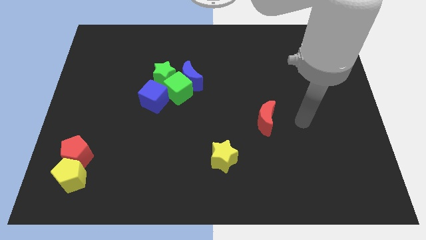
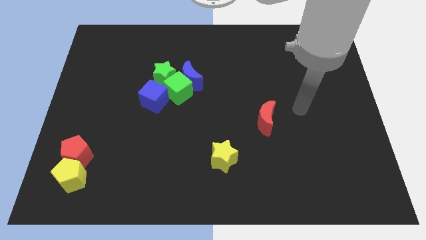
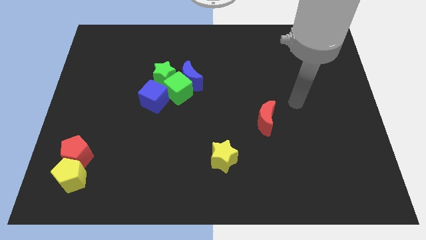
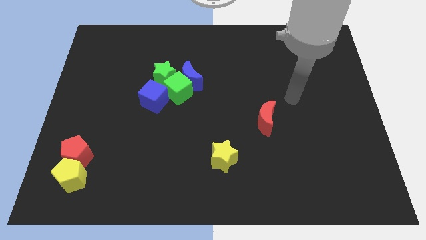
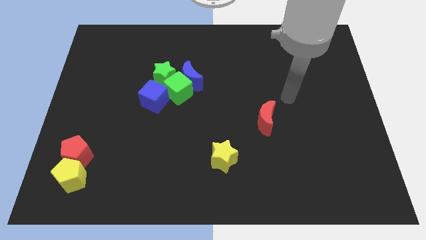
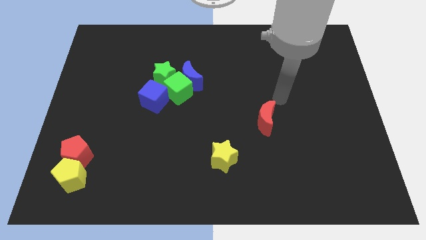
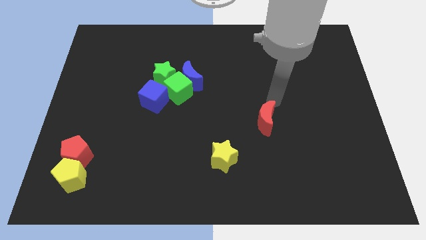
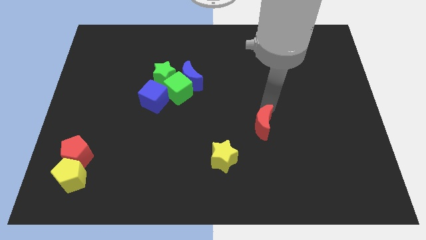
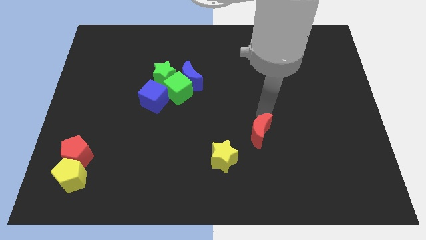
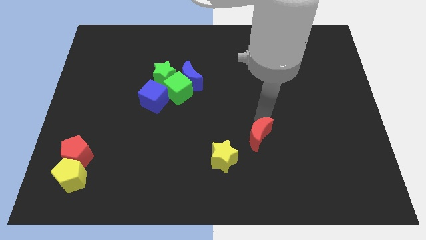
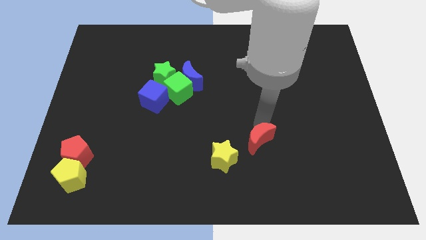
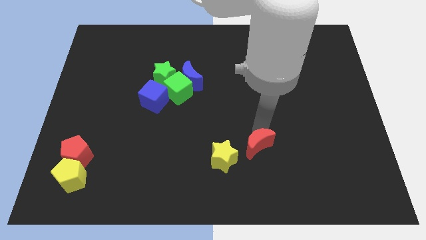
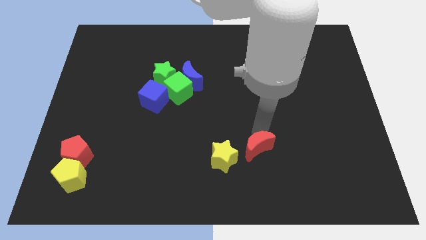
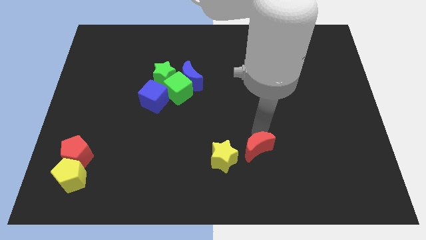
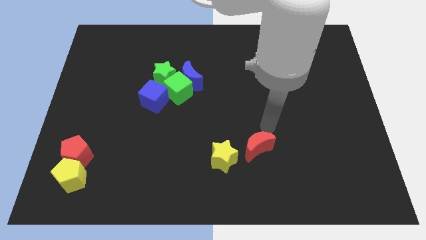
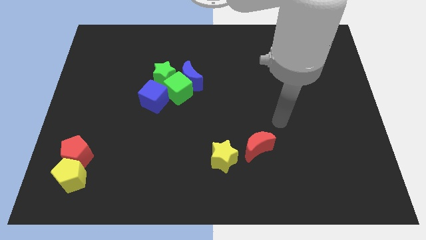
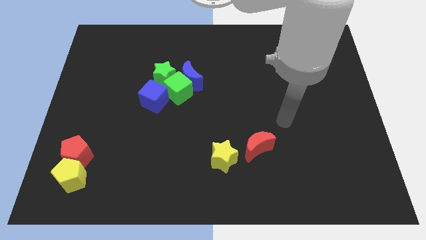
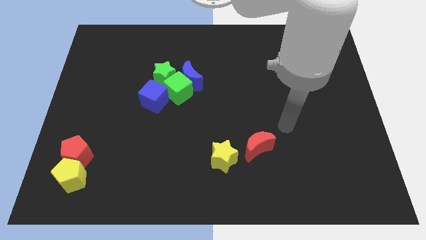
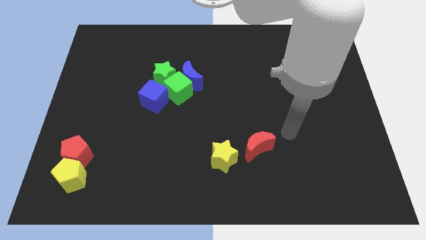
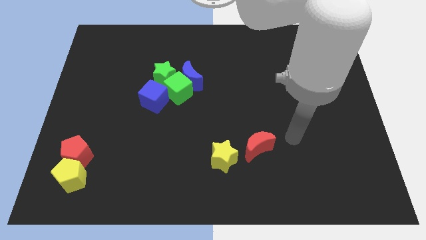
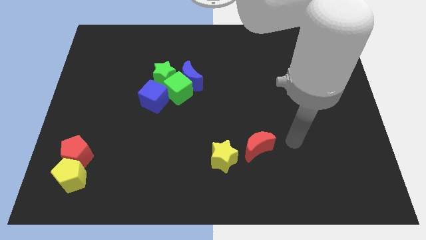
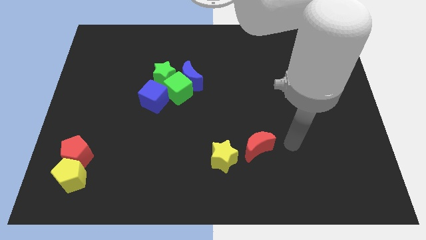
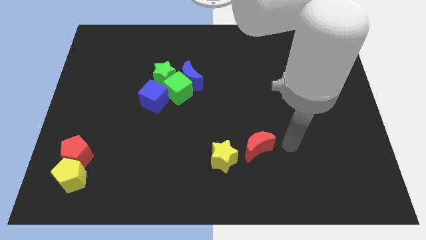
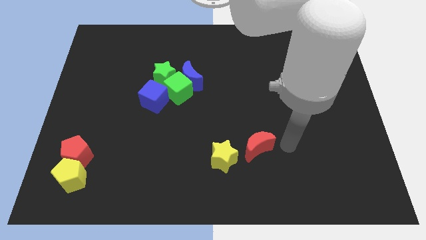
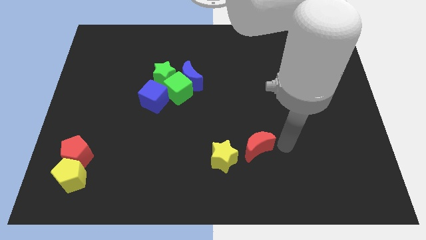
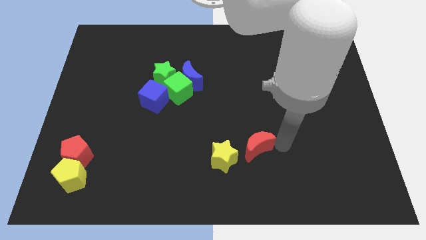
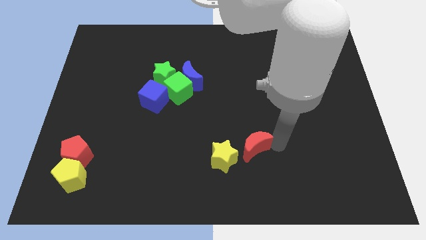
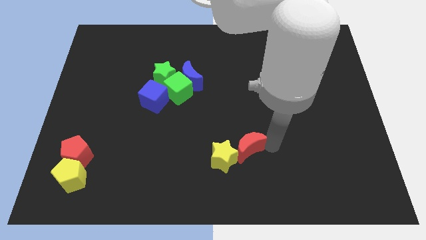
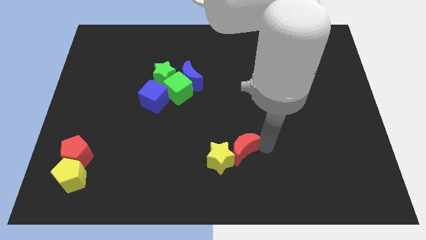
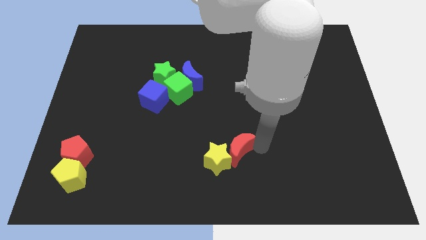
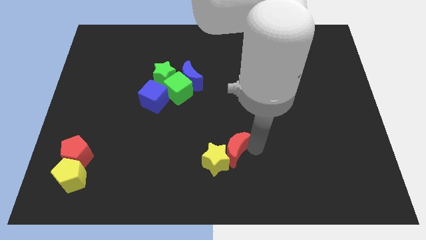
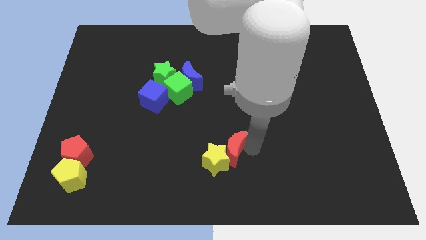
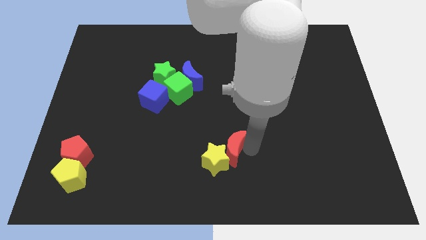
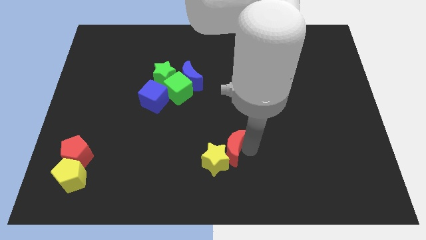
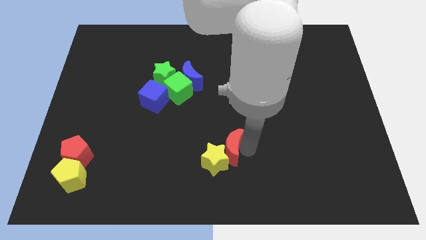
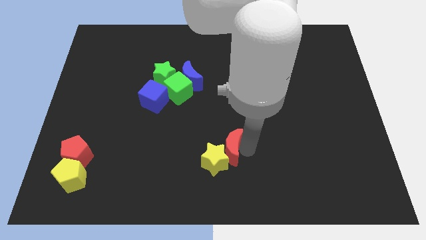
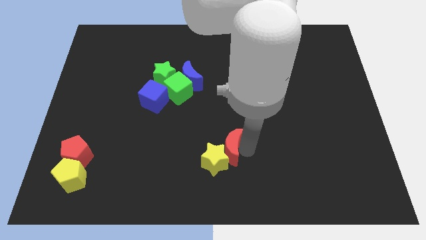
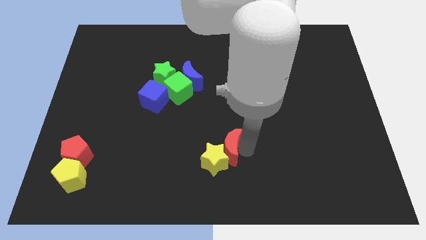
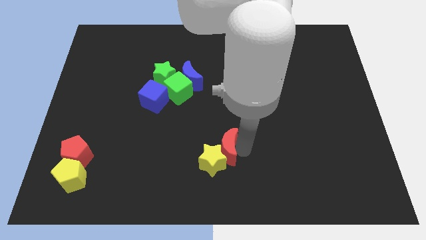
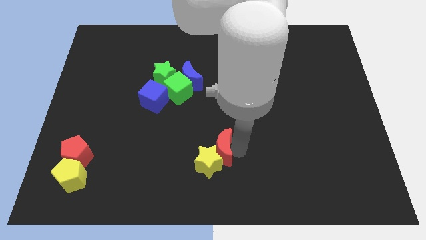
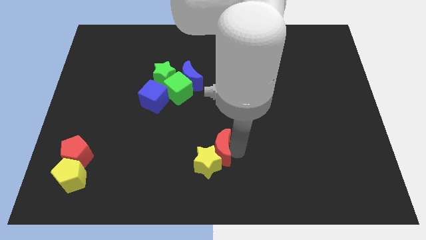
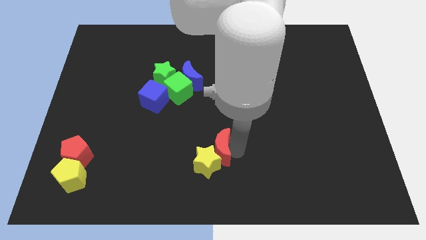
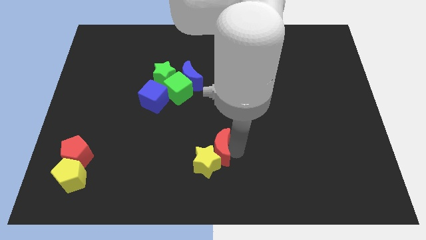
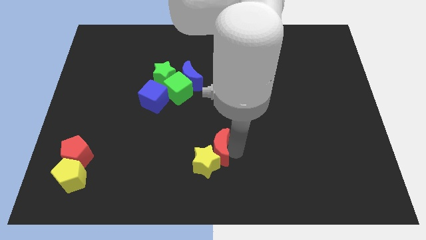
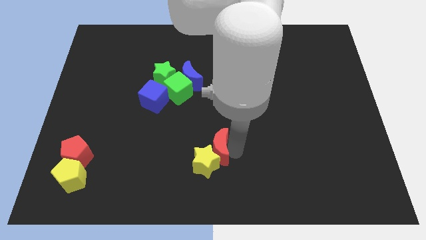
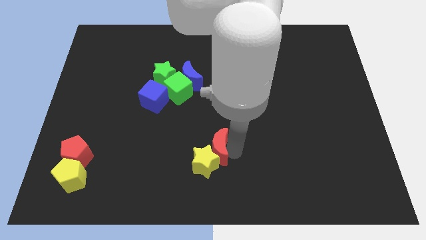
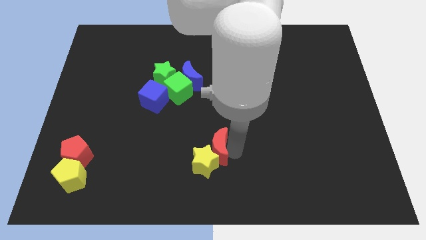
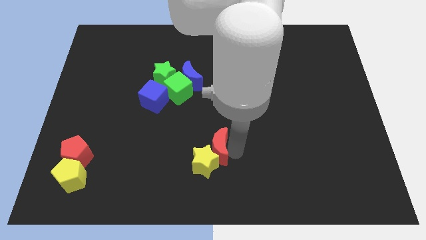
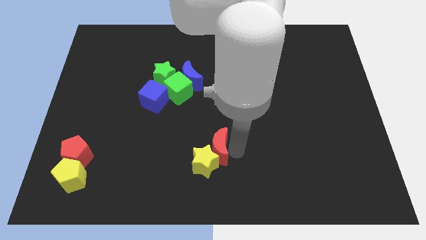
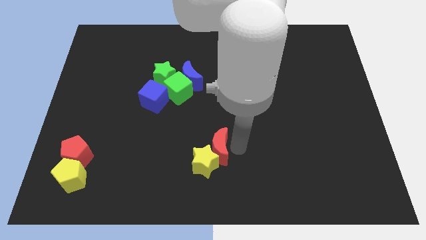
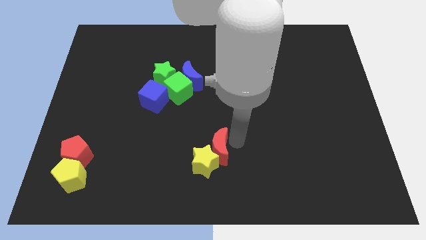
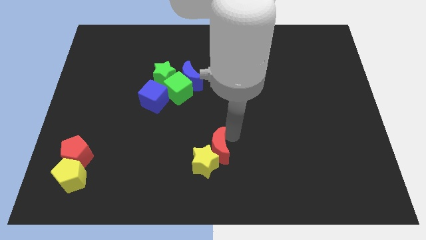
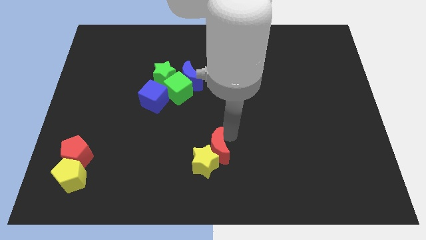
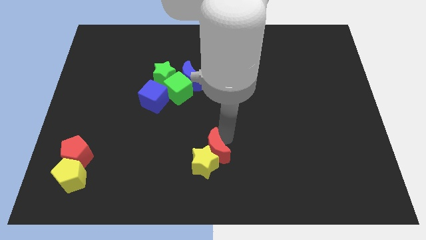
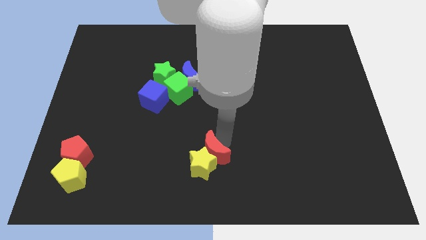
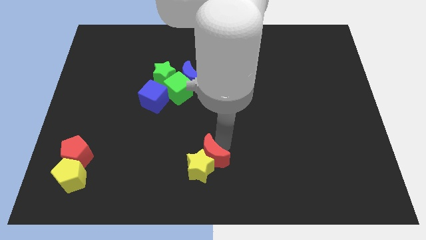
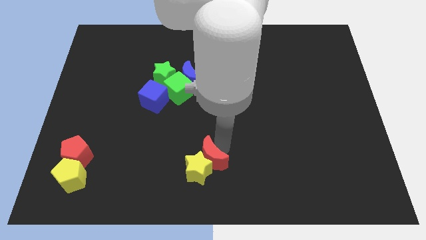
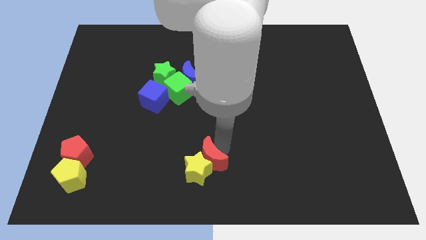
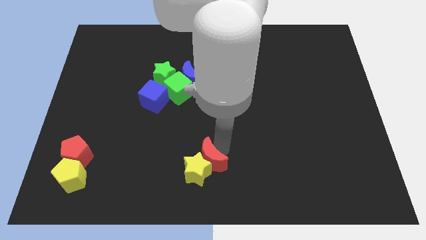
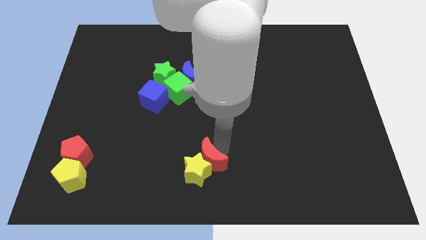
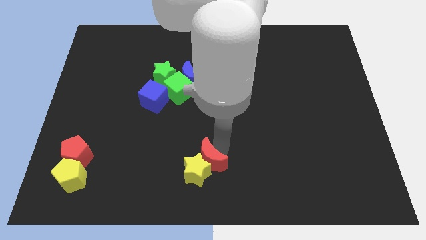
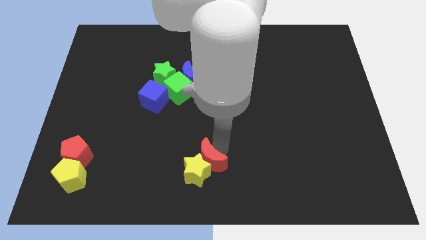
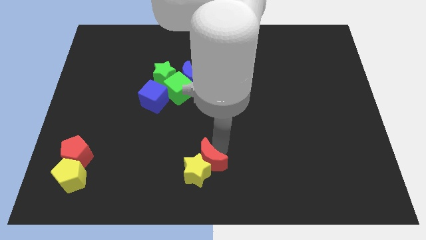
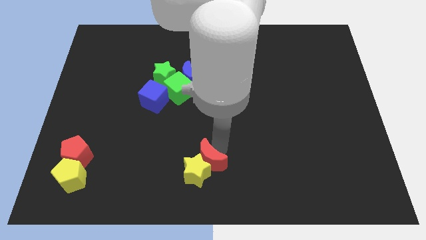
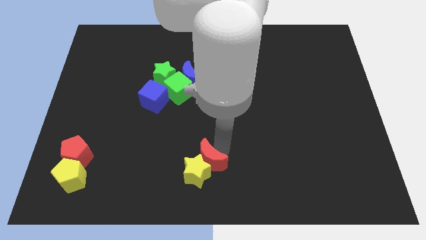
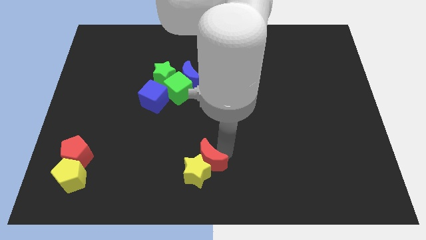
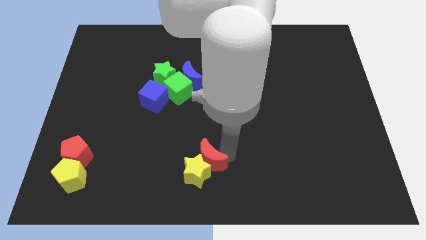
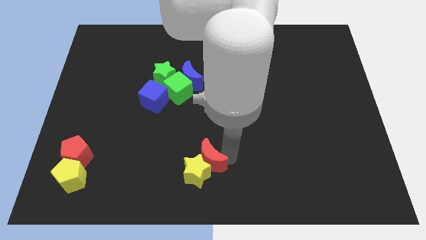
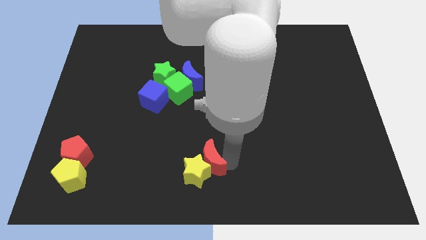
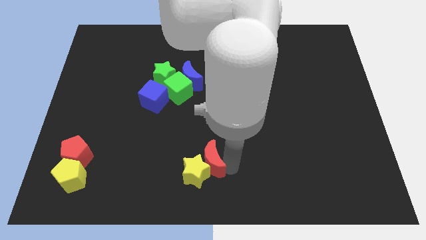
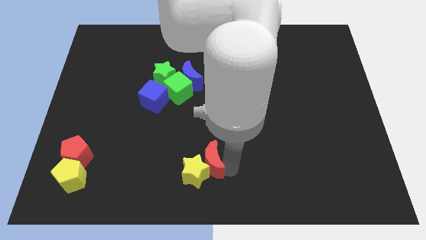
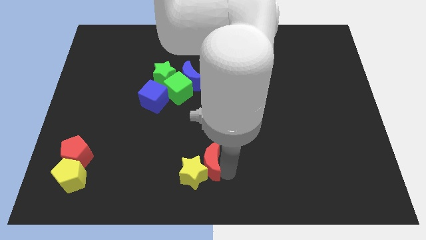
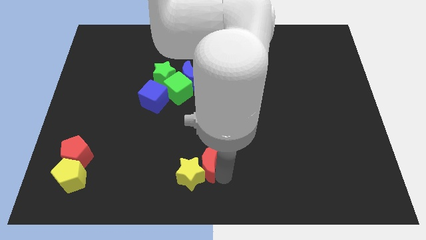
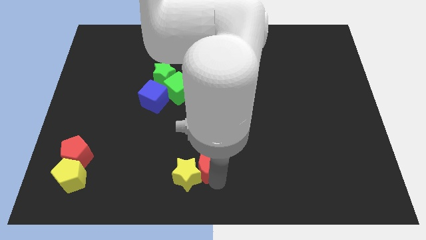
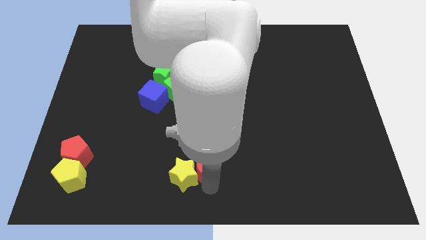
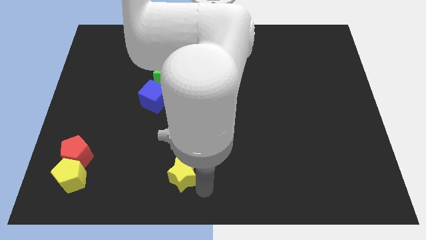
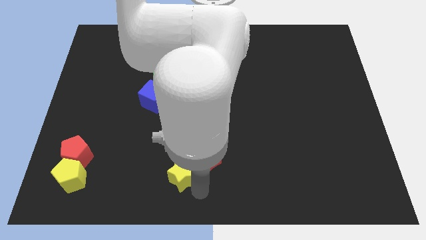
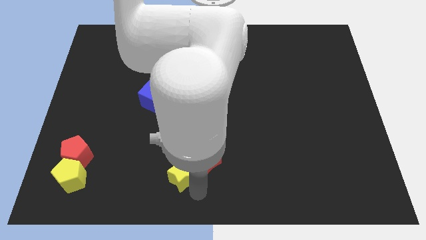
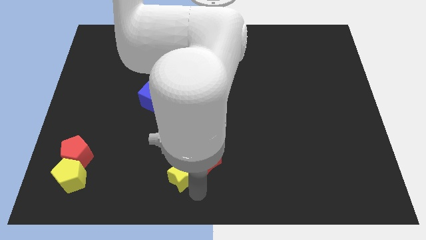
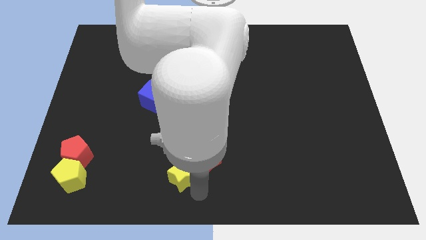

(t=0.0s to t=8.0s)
place the red crescent to the top right of the yellow star

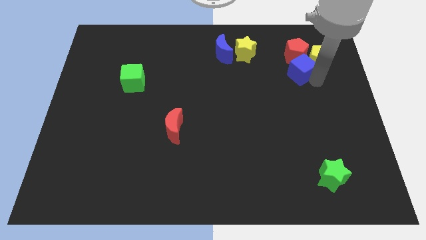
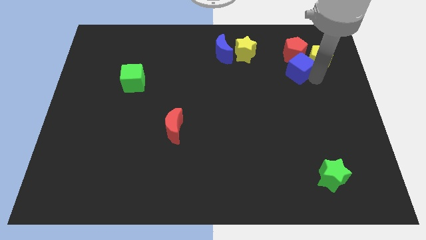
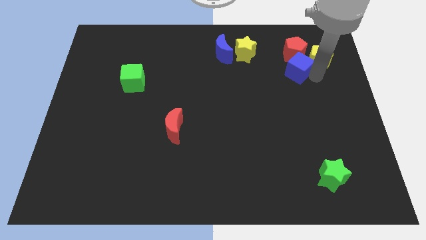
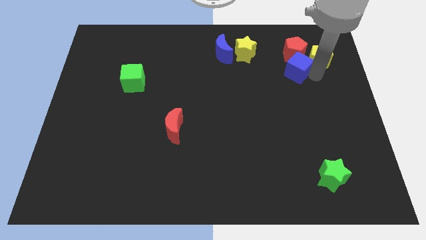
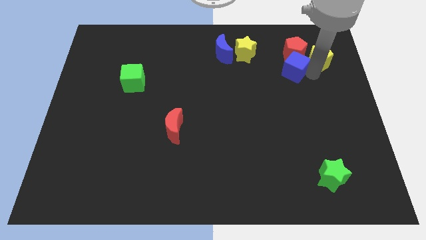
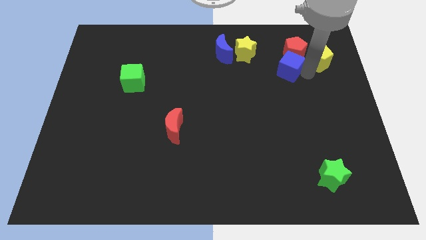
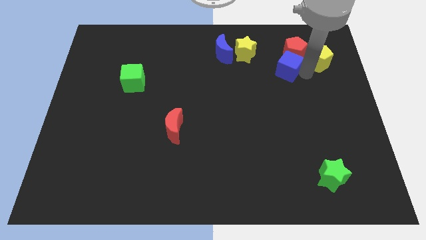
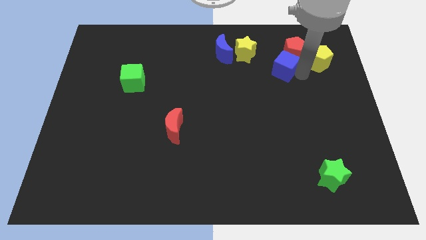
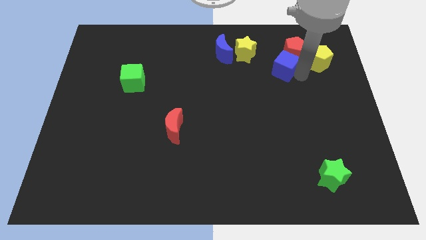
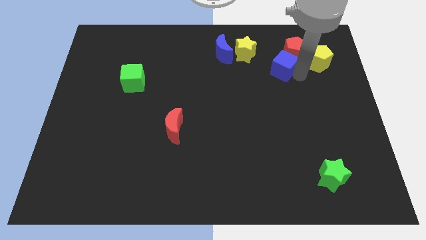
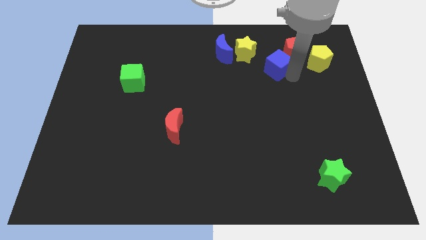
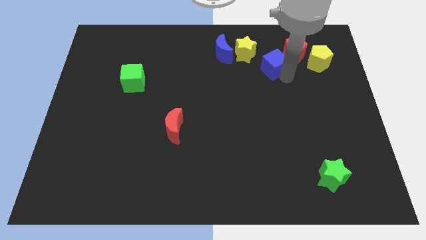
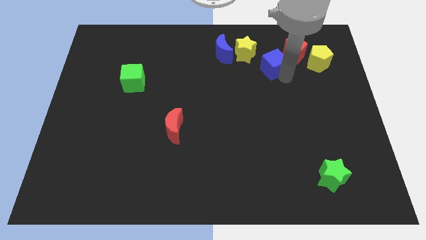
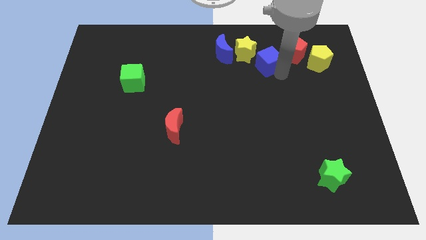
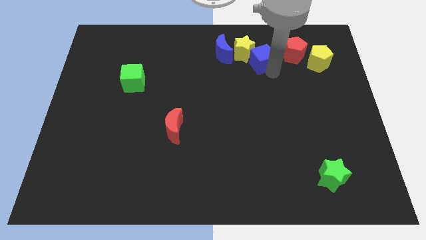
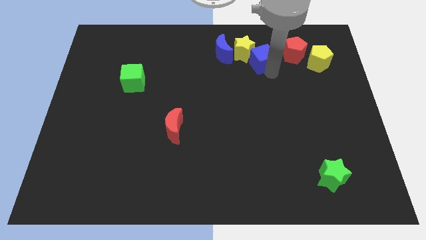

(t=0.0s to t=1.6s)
move the blue cube towards the yellow star
